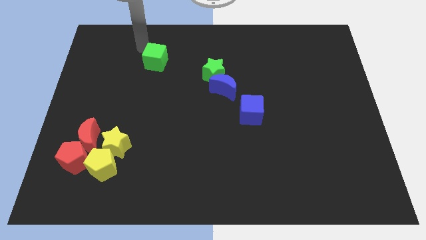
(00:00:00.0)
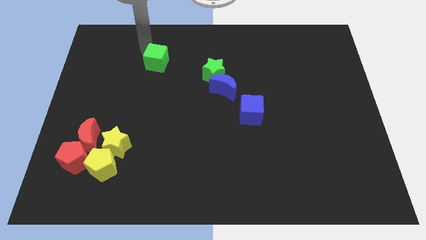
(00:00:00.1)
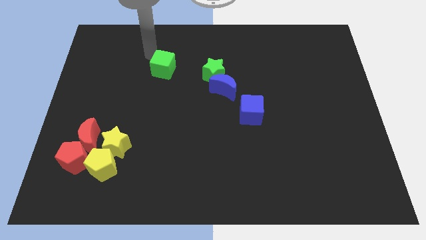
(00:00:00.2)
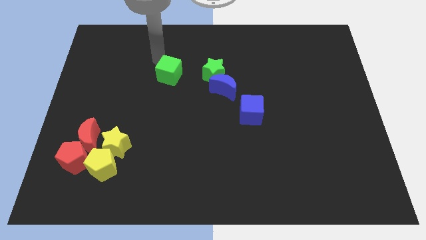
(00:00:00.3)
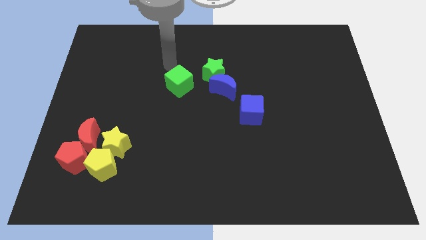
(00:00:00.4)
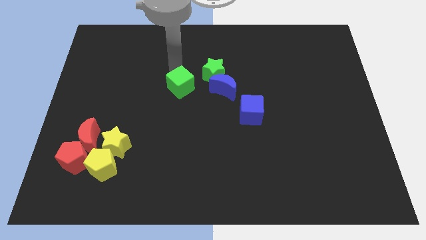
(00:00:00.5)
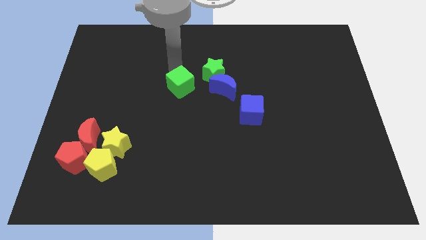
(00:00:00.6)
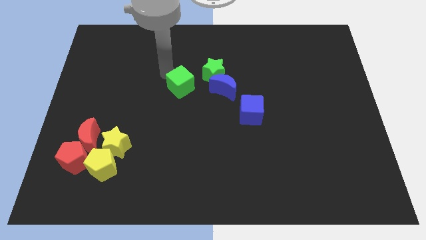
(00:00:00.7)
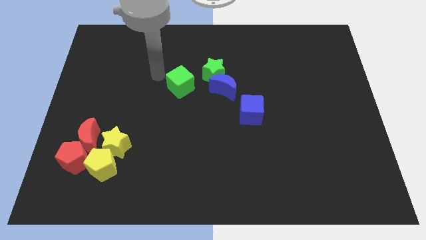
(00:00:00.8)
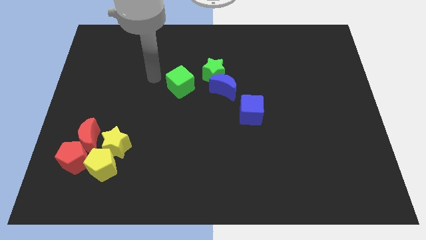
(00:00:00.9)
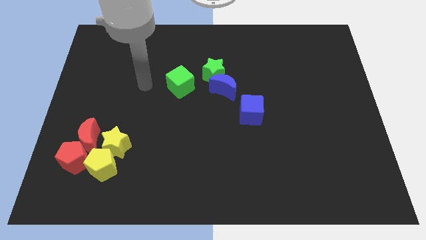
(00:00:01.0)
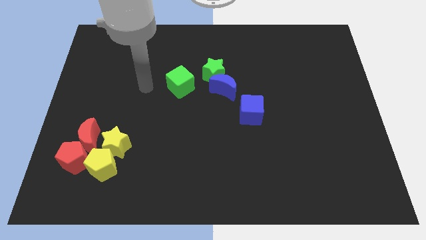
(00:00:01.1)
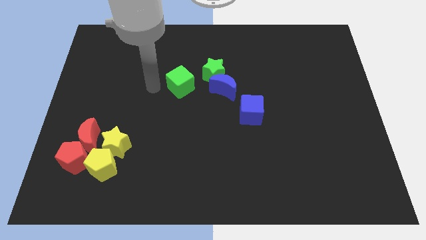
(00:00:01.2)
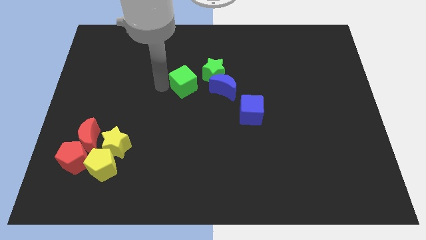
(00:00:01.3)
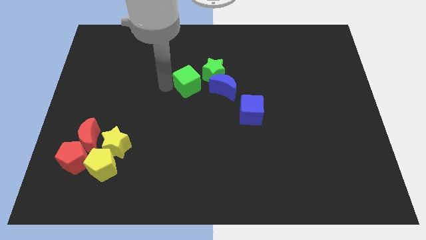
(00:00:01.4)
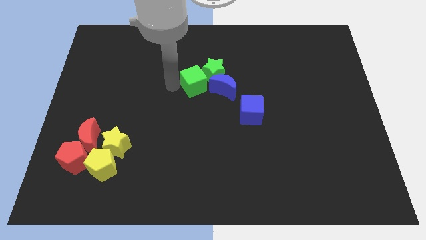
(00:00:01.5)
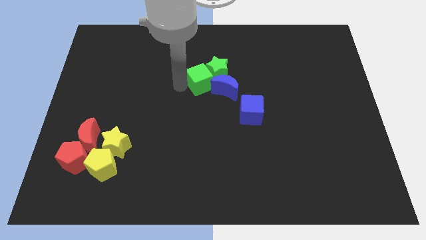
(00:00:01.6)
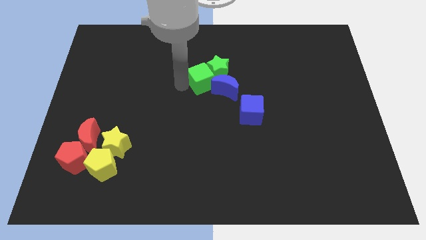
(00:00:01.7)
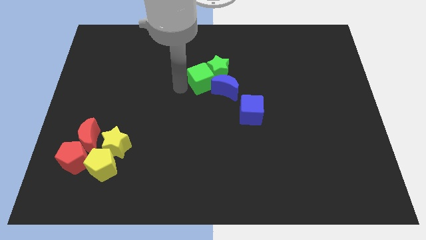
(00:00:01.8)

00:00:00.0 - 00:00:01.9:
push the green cube into the green star

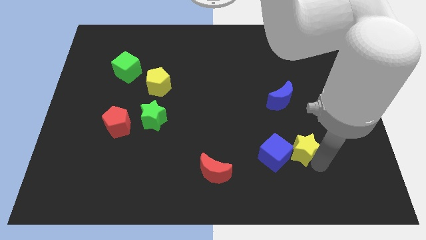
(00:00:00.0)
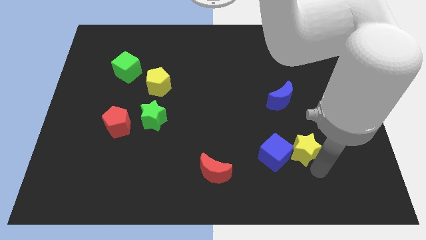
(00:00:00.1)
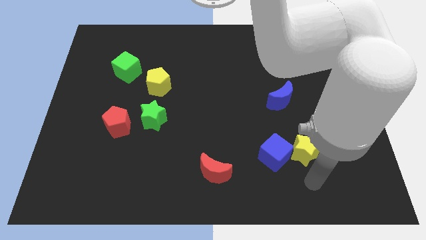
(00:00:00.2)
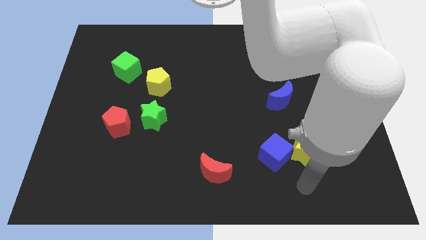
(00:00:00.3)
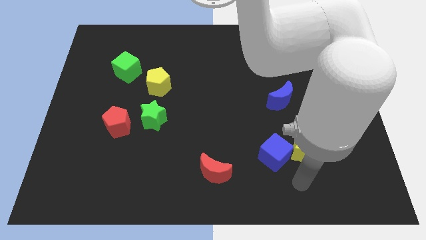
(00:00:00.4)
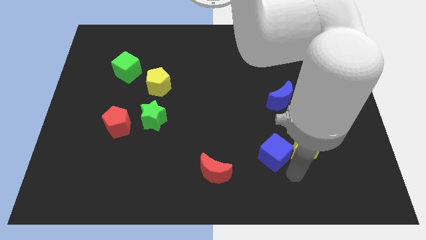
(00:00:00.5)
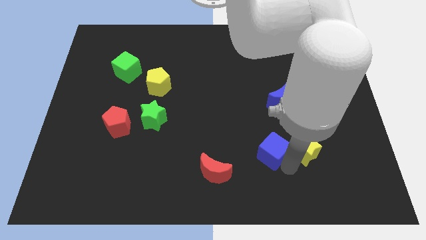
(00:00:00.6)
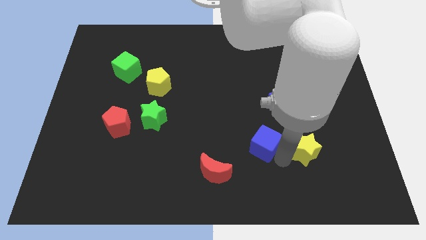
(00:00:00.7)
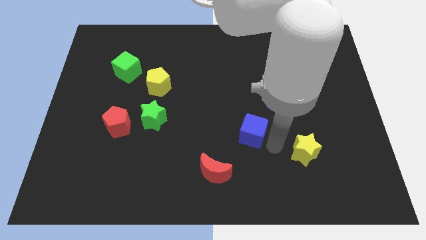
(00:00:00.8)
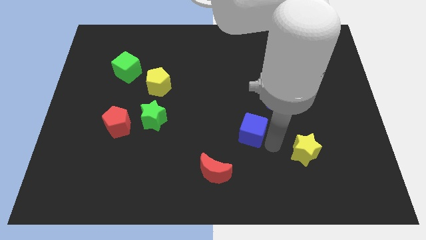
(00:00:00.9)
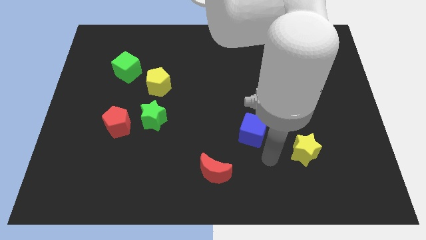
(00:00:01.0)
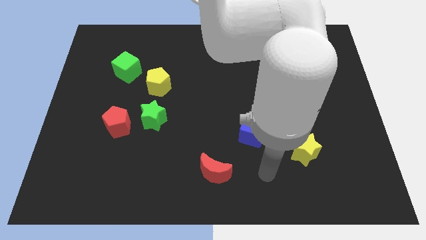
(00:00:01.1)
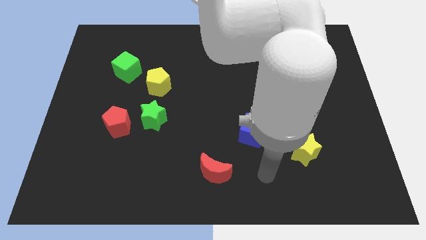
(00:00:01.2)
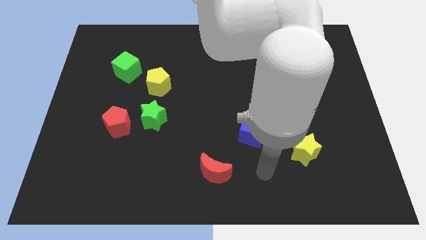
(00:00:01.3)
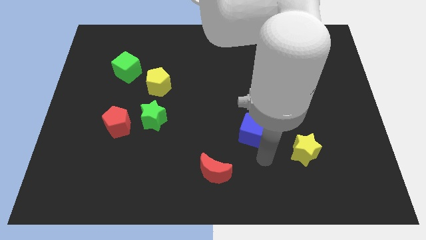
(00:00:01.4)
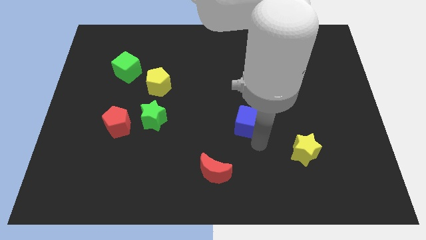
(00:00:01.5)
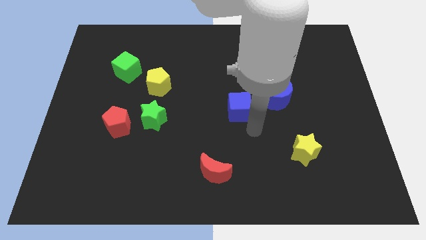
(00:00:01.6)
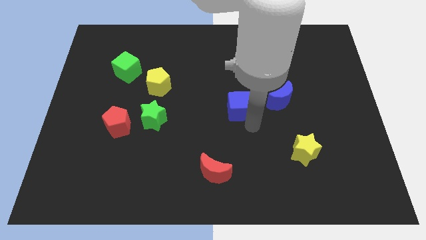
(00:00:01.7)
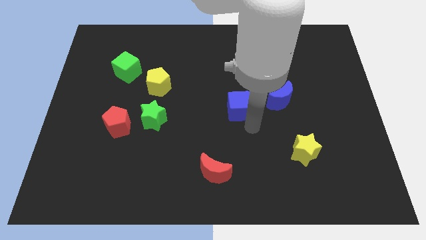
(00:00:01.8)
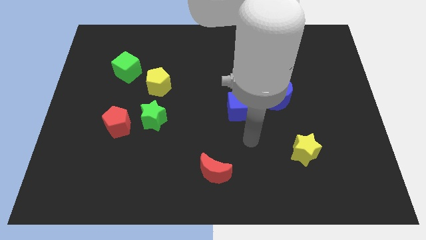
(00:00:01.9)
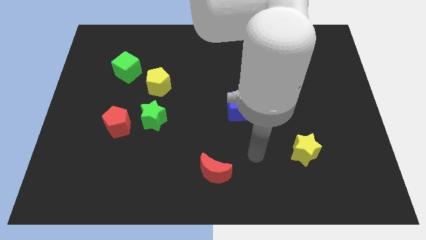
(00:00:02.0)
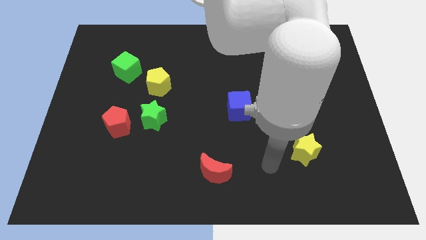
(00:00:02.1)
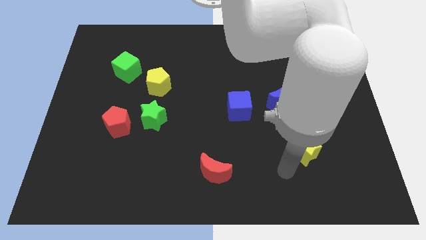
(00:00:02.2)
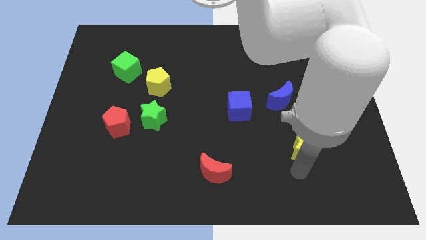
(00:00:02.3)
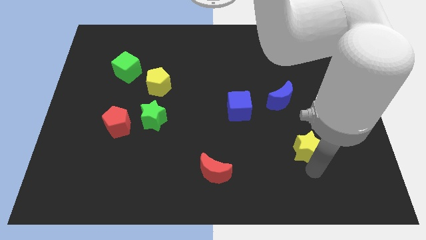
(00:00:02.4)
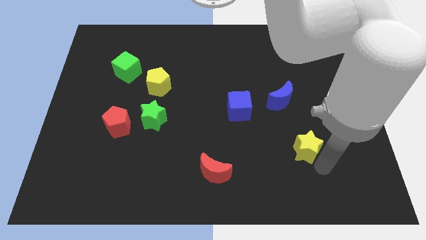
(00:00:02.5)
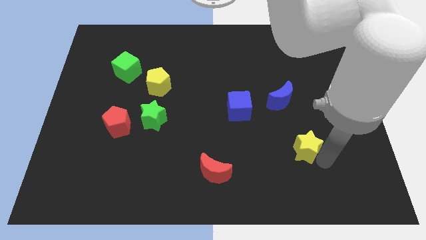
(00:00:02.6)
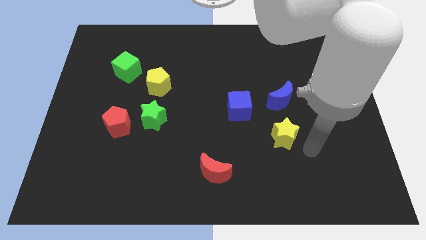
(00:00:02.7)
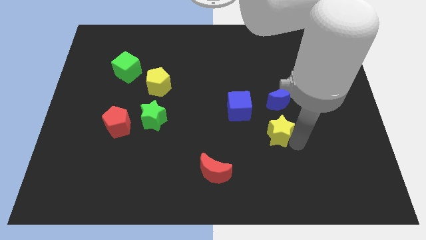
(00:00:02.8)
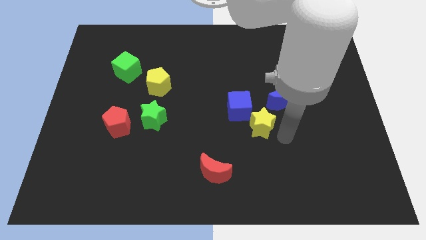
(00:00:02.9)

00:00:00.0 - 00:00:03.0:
push the blue cube left to the blue crescent

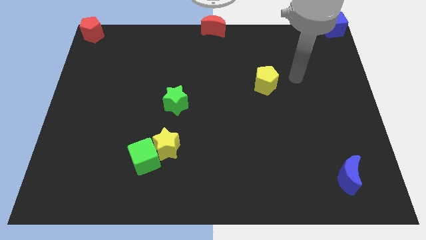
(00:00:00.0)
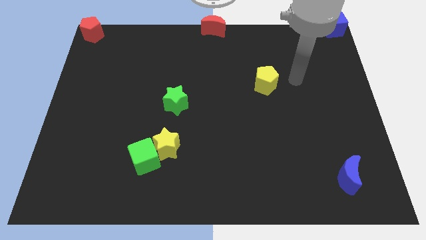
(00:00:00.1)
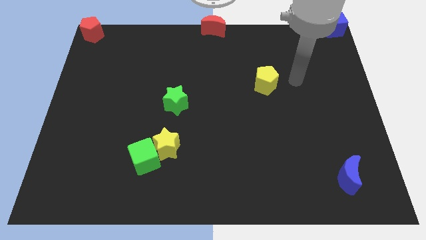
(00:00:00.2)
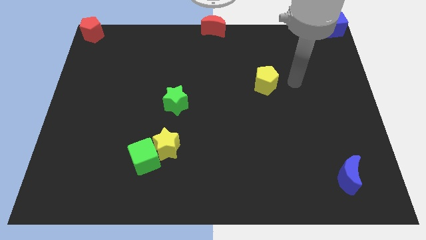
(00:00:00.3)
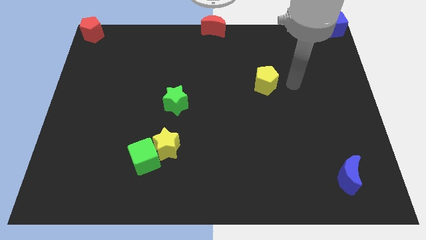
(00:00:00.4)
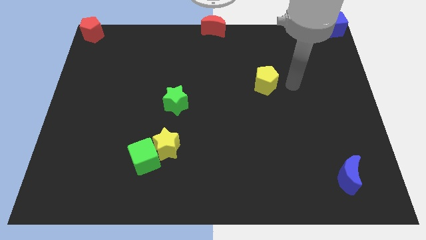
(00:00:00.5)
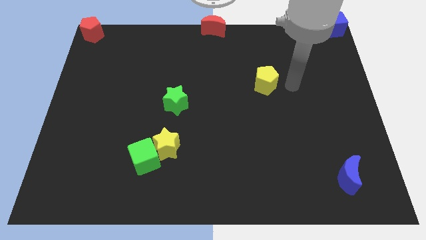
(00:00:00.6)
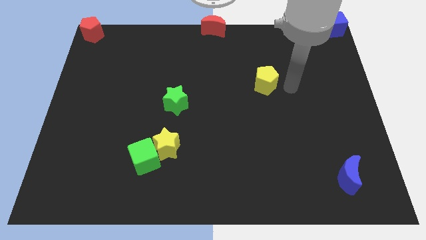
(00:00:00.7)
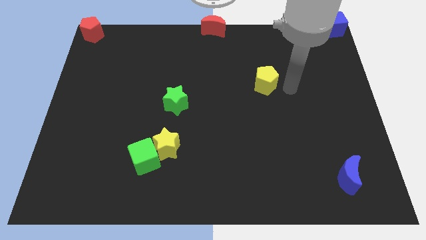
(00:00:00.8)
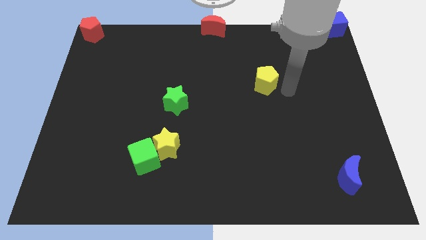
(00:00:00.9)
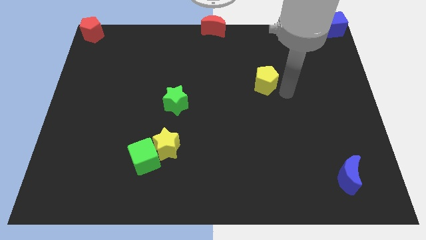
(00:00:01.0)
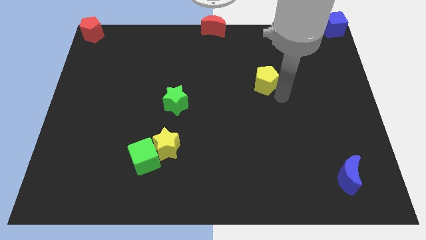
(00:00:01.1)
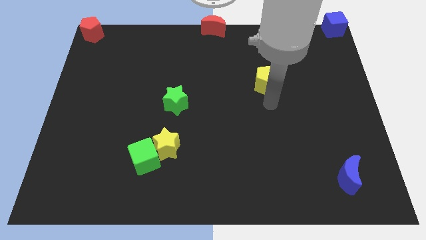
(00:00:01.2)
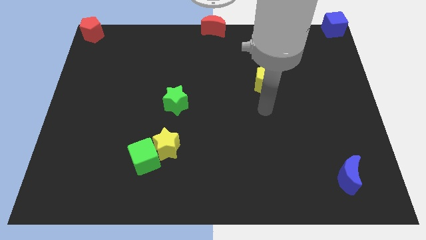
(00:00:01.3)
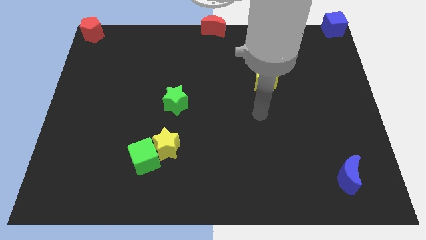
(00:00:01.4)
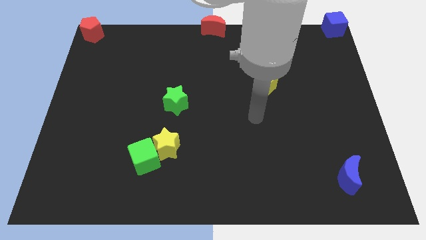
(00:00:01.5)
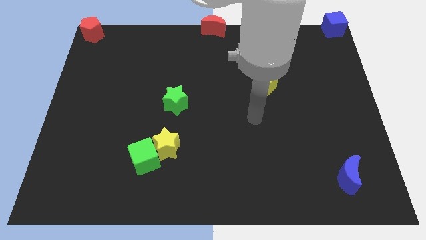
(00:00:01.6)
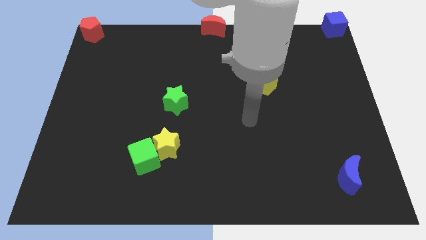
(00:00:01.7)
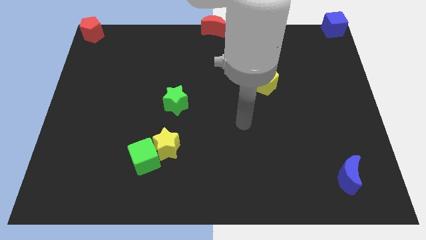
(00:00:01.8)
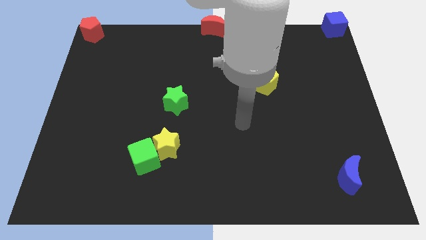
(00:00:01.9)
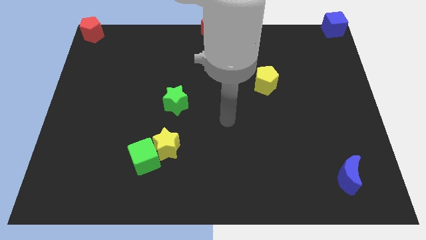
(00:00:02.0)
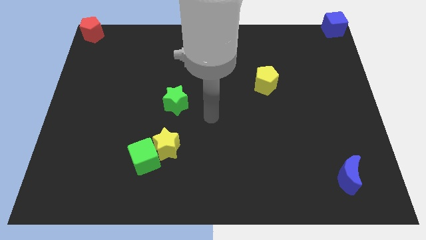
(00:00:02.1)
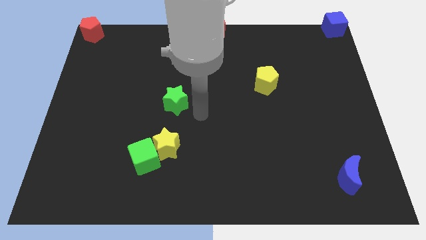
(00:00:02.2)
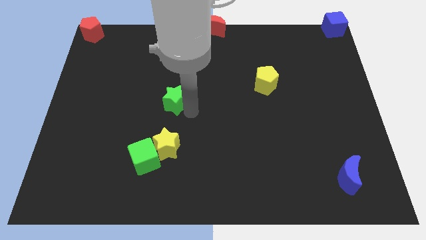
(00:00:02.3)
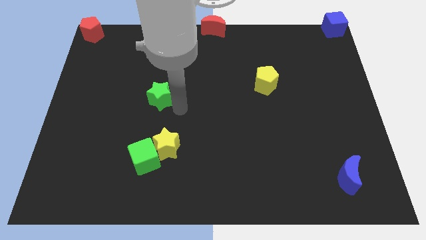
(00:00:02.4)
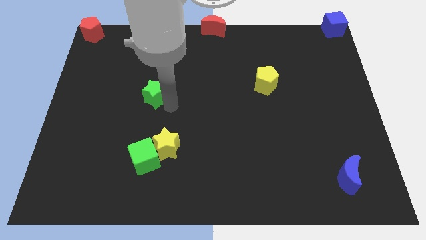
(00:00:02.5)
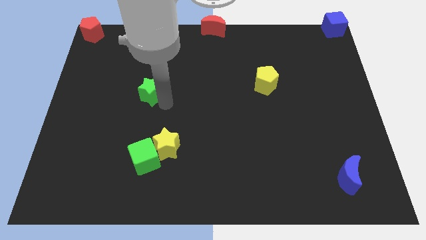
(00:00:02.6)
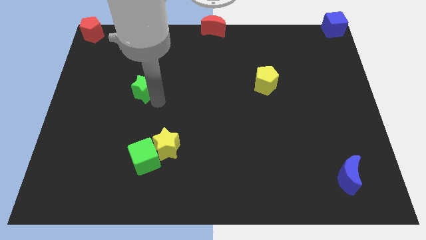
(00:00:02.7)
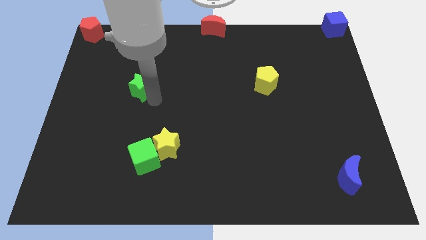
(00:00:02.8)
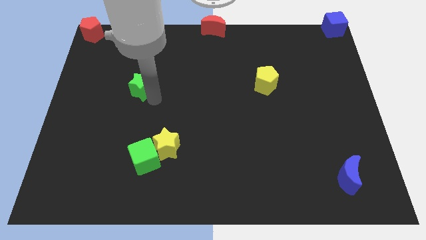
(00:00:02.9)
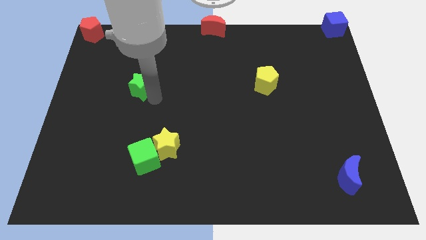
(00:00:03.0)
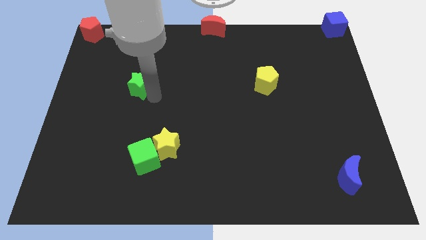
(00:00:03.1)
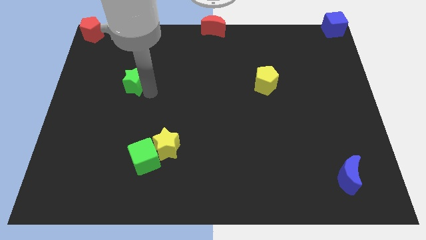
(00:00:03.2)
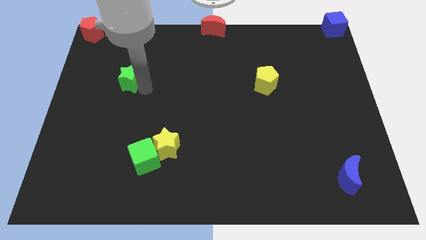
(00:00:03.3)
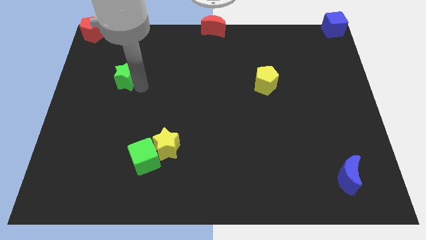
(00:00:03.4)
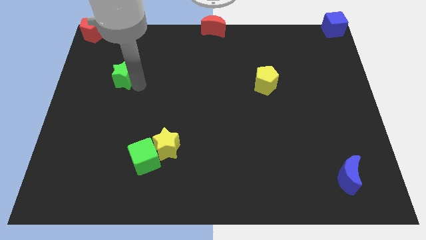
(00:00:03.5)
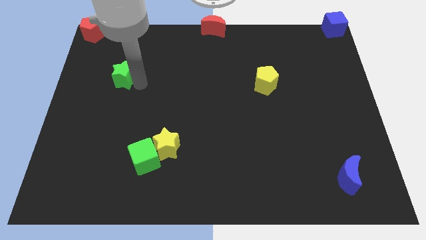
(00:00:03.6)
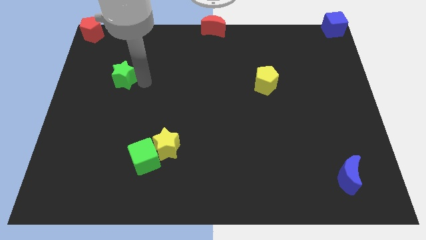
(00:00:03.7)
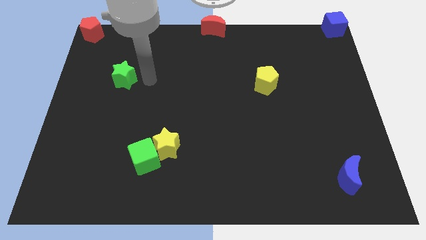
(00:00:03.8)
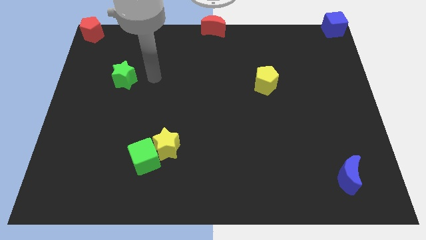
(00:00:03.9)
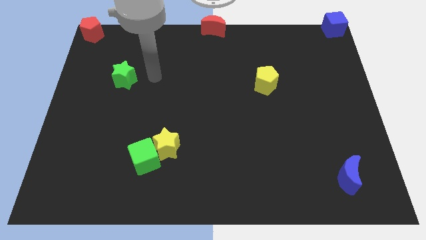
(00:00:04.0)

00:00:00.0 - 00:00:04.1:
slide green star up horizontal to yellow pentagon
